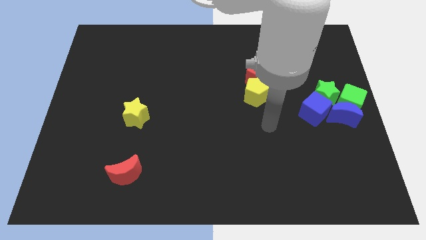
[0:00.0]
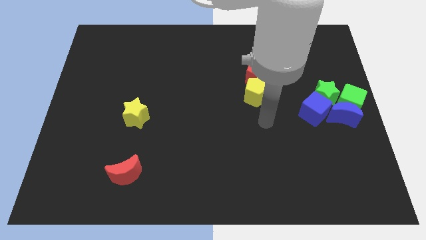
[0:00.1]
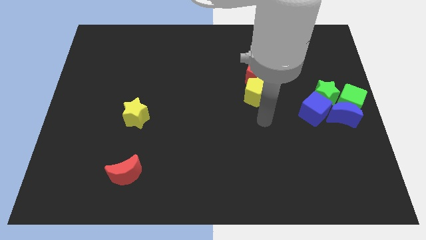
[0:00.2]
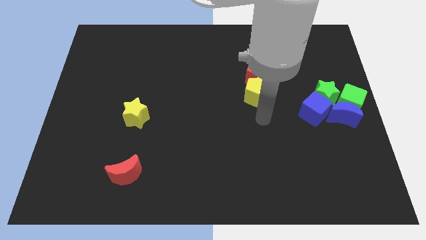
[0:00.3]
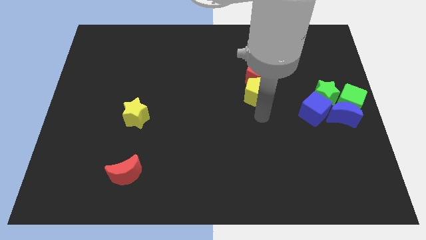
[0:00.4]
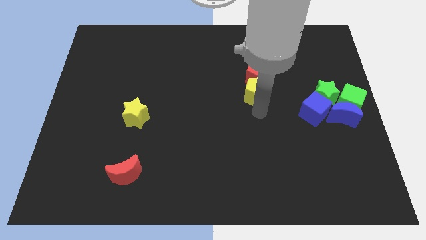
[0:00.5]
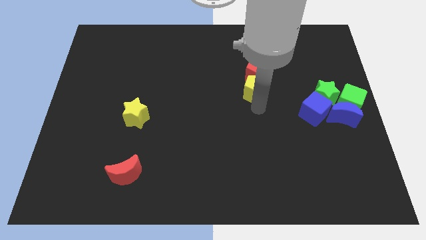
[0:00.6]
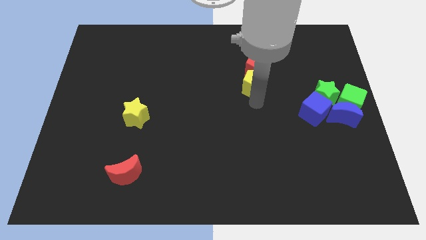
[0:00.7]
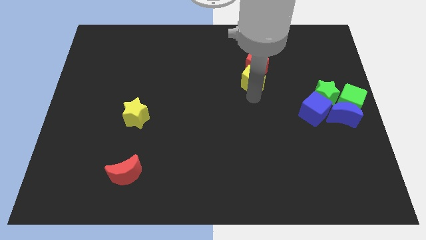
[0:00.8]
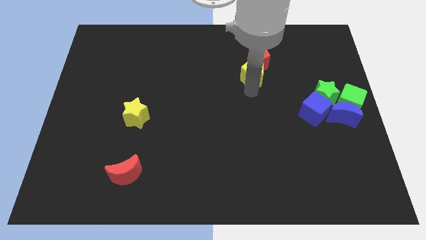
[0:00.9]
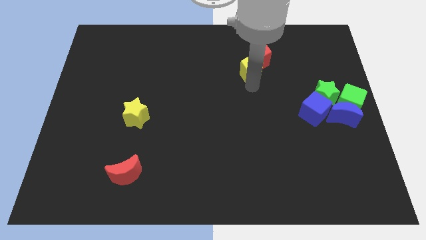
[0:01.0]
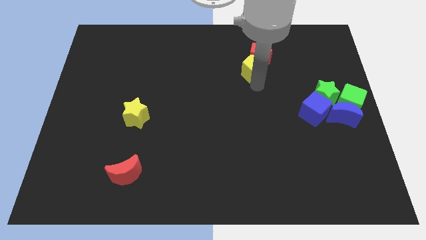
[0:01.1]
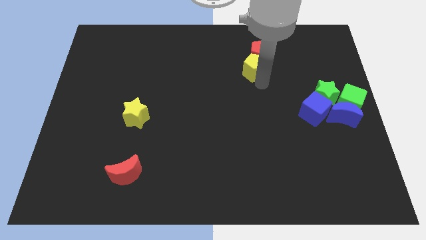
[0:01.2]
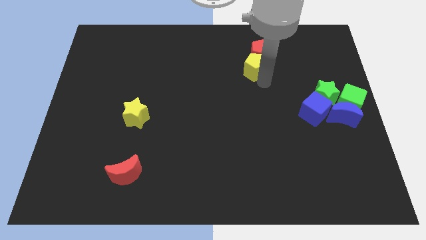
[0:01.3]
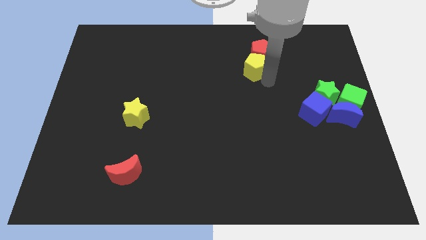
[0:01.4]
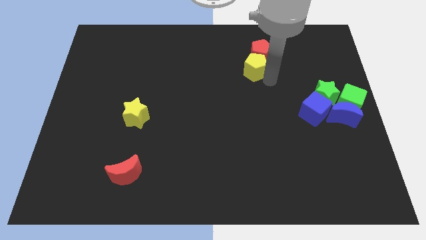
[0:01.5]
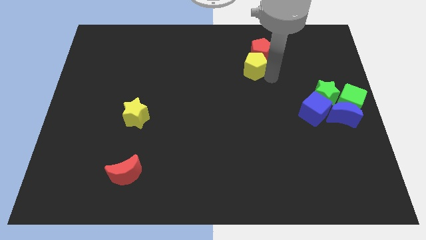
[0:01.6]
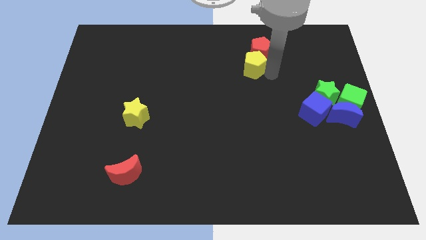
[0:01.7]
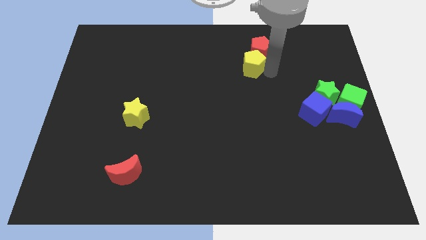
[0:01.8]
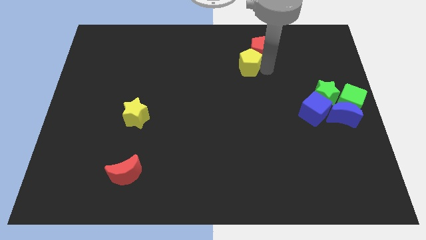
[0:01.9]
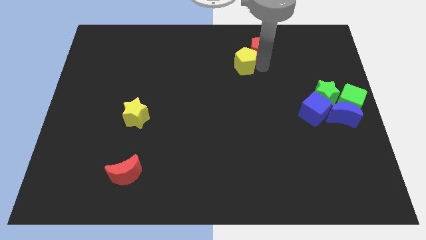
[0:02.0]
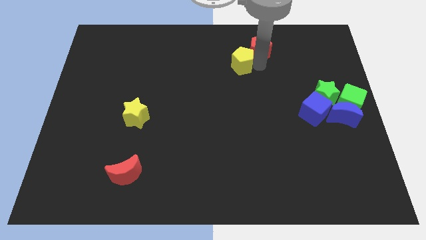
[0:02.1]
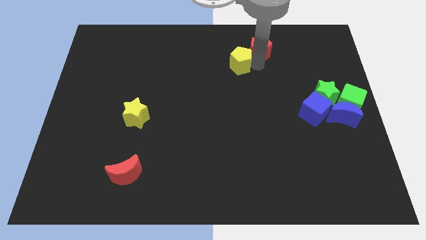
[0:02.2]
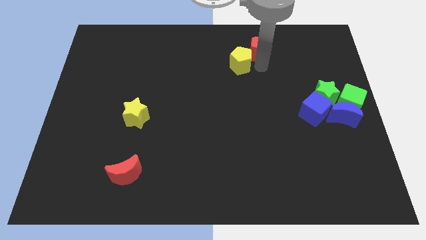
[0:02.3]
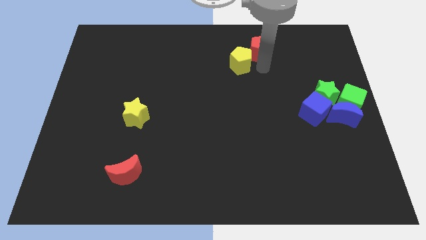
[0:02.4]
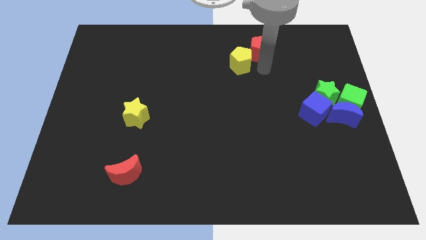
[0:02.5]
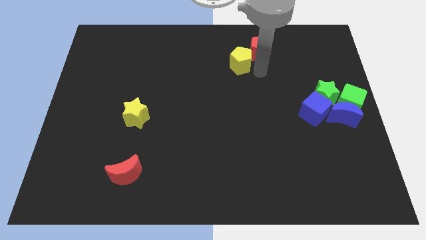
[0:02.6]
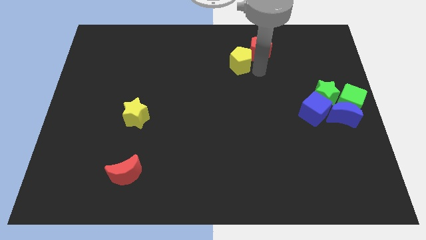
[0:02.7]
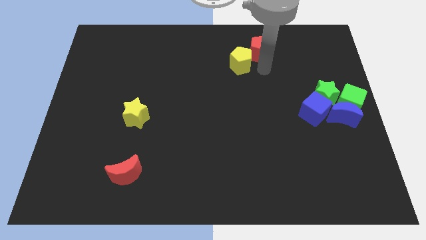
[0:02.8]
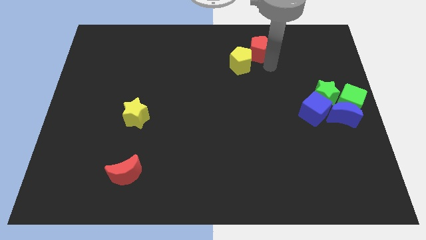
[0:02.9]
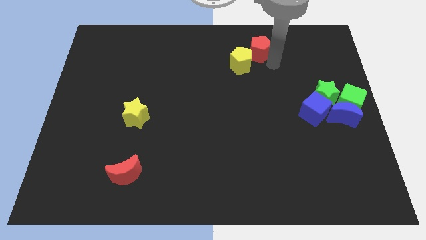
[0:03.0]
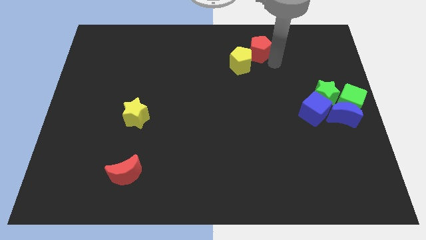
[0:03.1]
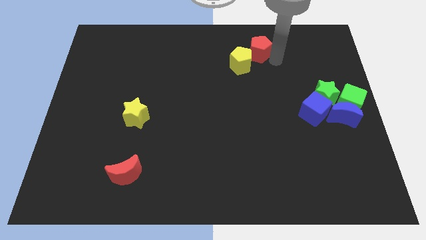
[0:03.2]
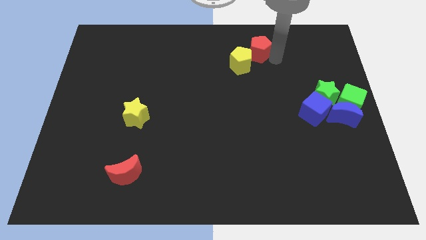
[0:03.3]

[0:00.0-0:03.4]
adjust the yellow pentagon diagonally bottom left to the red pentagon

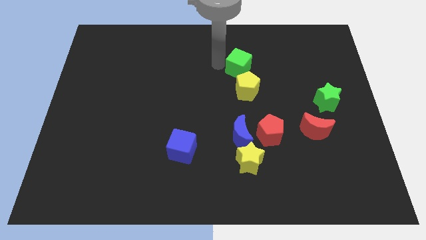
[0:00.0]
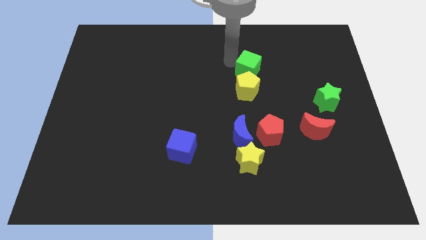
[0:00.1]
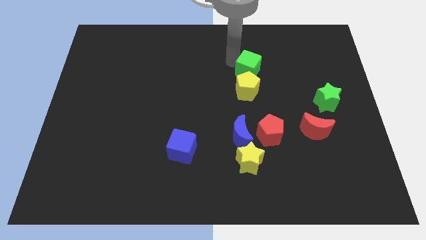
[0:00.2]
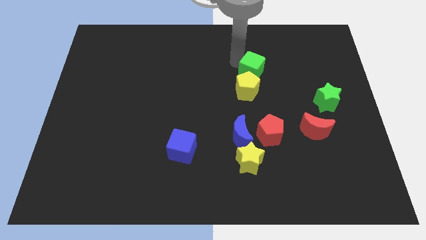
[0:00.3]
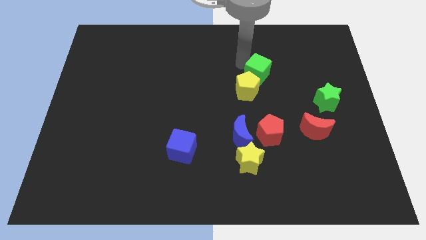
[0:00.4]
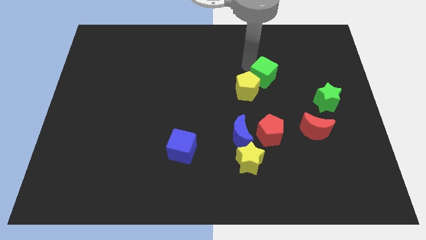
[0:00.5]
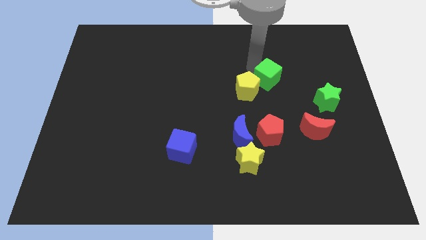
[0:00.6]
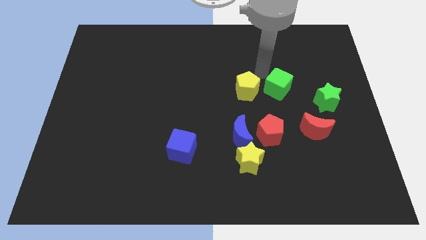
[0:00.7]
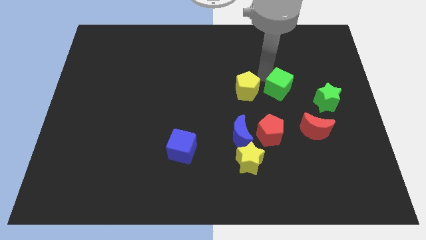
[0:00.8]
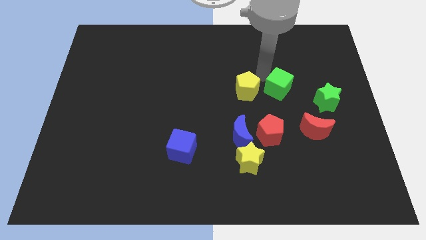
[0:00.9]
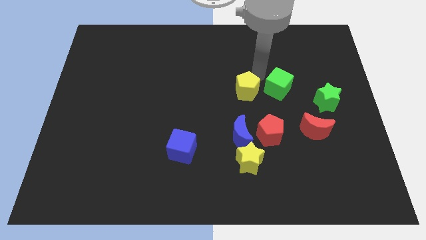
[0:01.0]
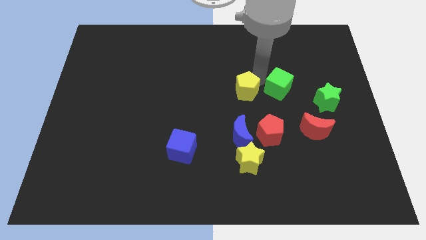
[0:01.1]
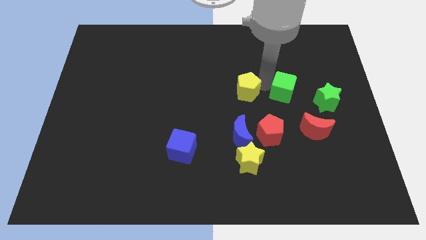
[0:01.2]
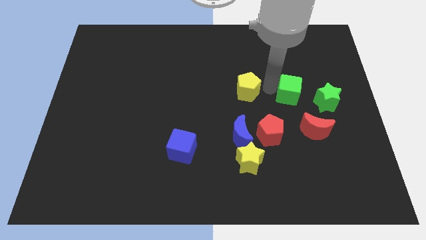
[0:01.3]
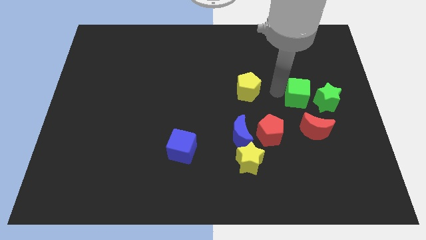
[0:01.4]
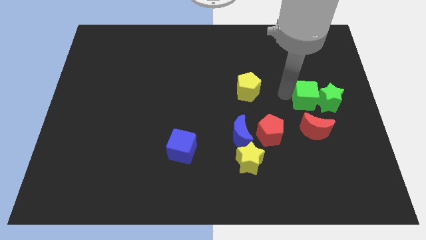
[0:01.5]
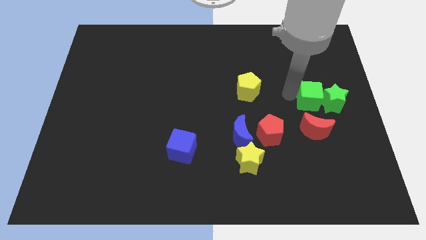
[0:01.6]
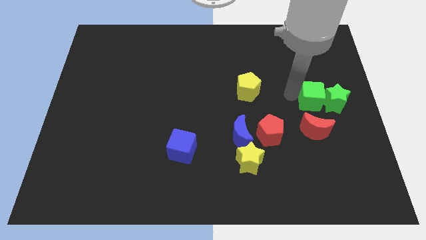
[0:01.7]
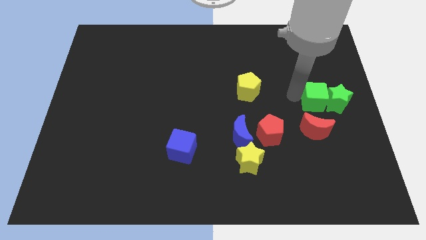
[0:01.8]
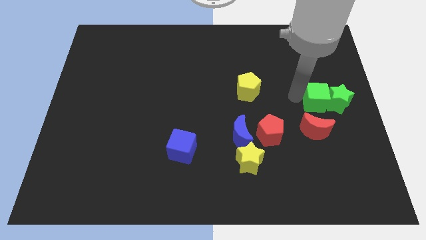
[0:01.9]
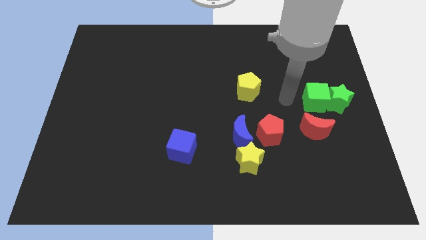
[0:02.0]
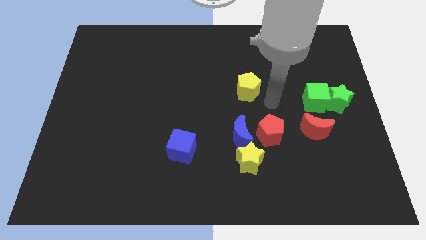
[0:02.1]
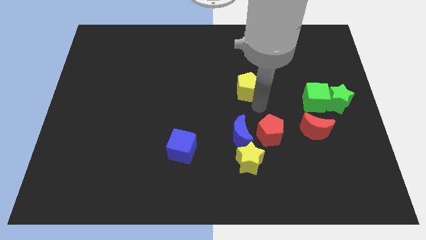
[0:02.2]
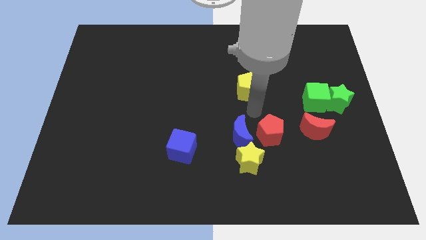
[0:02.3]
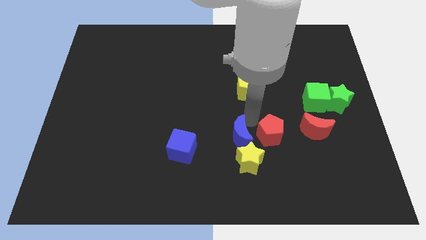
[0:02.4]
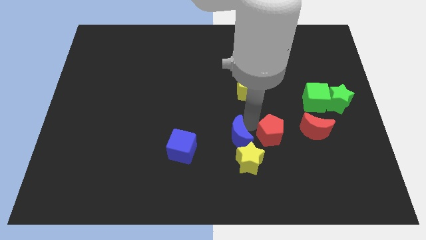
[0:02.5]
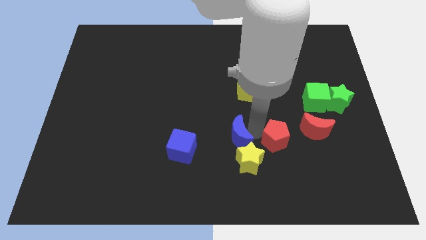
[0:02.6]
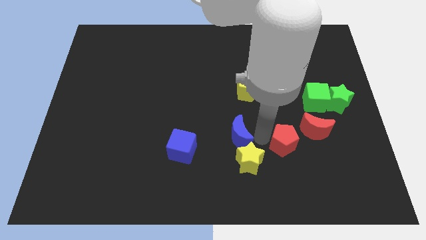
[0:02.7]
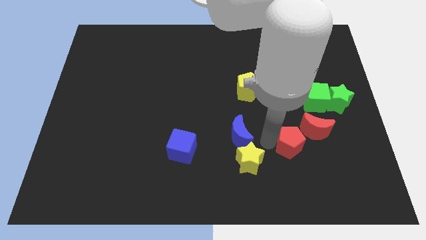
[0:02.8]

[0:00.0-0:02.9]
push the green cube into the green star

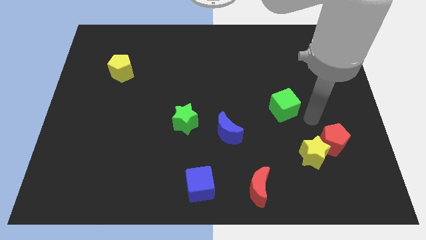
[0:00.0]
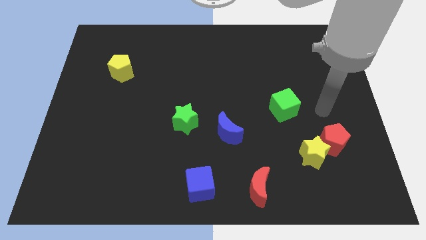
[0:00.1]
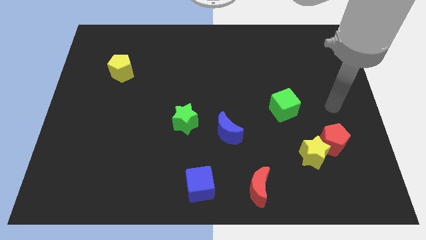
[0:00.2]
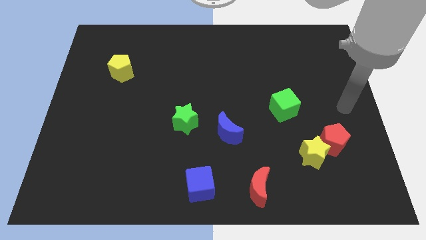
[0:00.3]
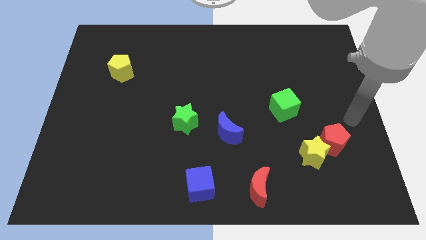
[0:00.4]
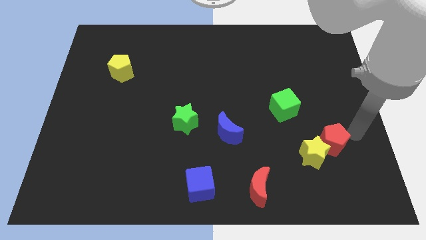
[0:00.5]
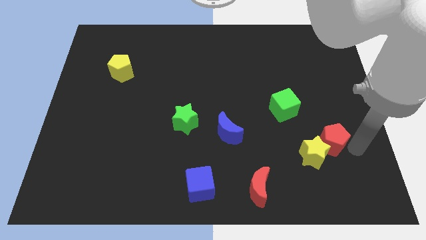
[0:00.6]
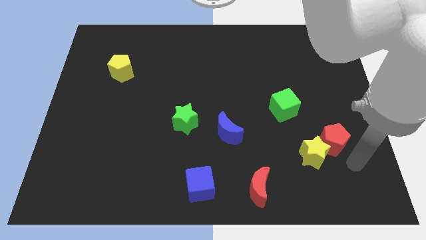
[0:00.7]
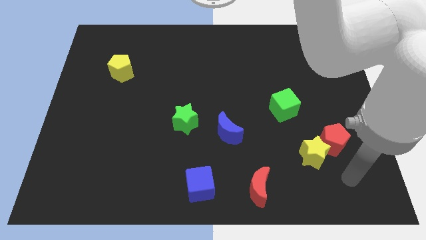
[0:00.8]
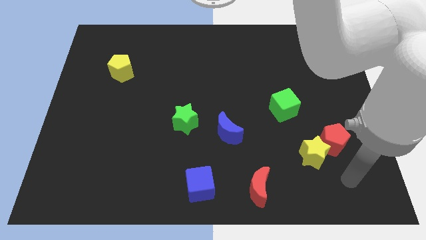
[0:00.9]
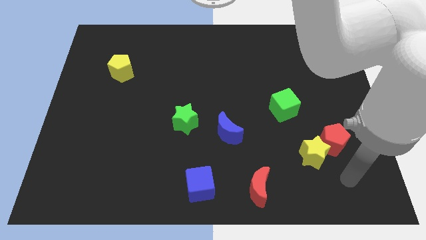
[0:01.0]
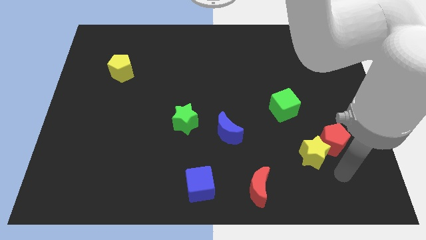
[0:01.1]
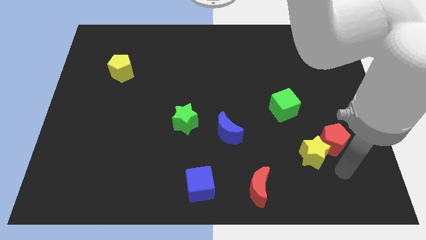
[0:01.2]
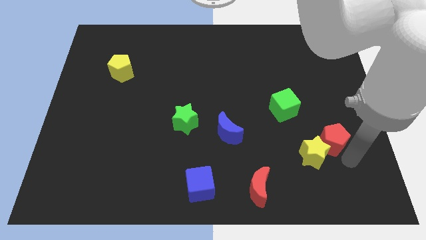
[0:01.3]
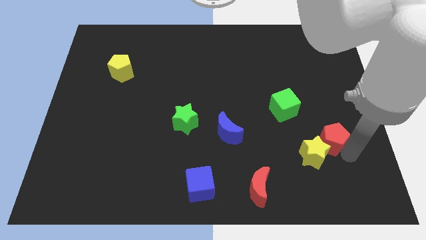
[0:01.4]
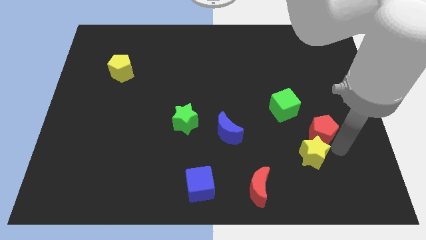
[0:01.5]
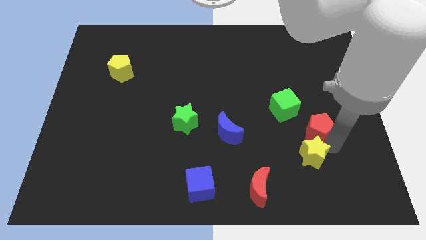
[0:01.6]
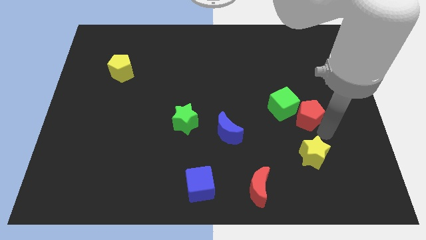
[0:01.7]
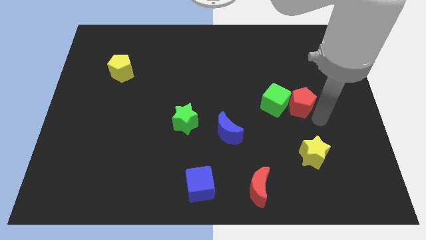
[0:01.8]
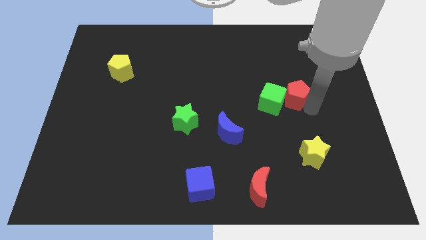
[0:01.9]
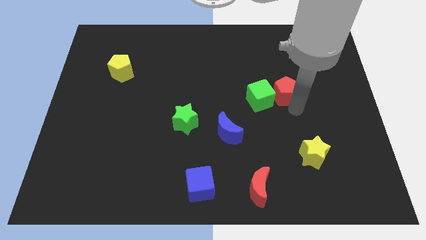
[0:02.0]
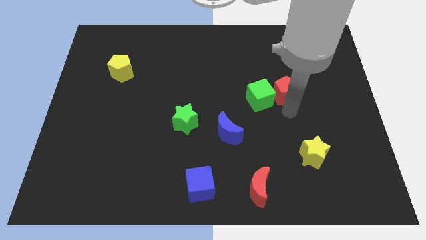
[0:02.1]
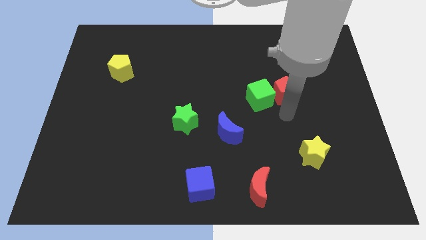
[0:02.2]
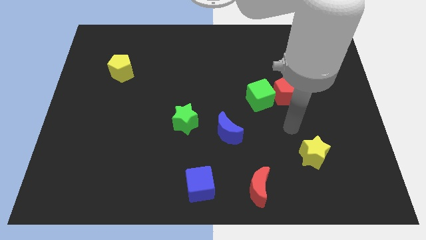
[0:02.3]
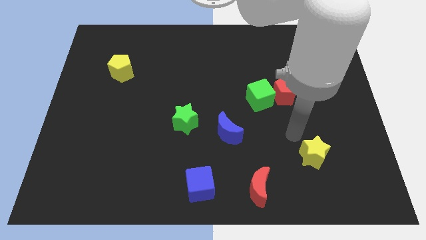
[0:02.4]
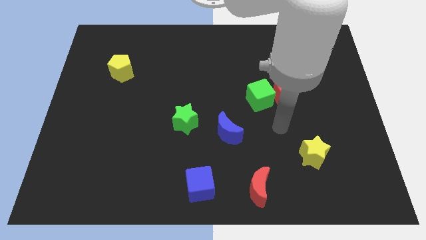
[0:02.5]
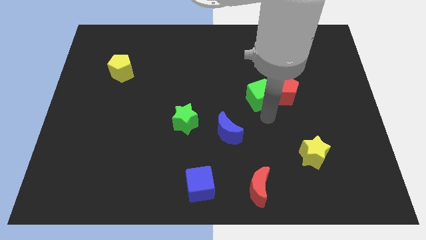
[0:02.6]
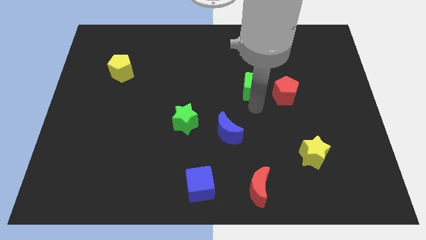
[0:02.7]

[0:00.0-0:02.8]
place the red pentagon right to the green cube
